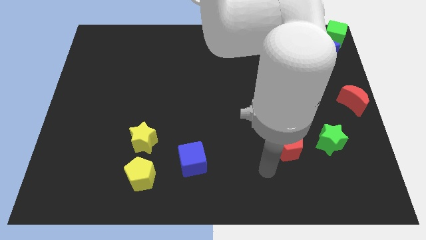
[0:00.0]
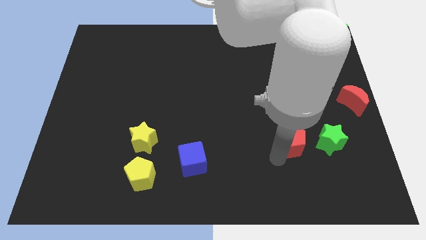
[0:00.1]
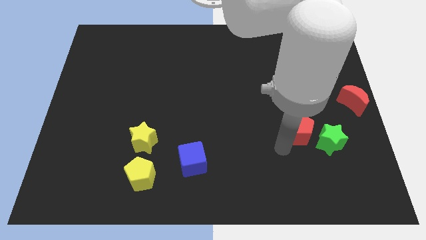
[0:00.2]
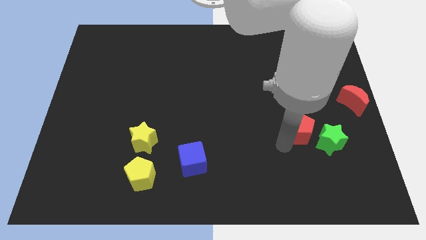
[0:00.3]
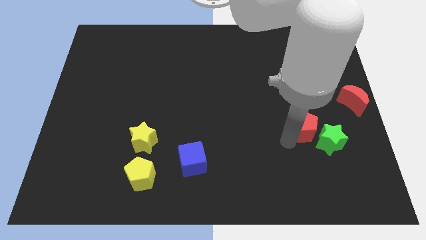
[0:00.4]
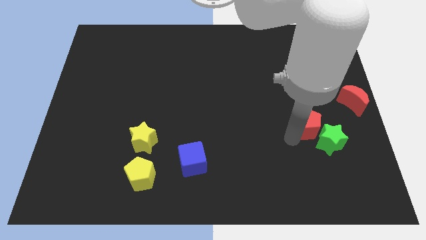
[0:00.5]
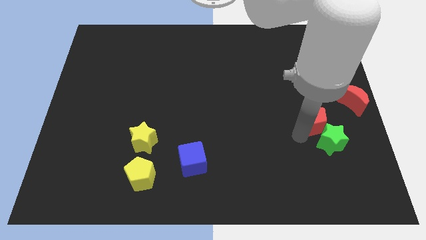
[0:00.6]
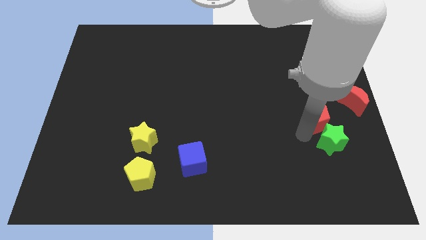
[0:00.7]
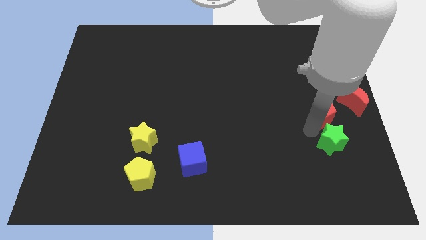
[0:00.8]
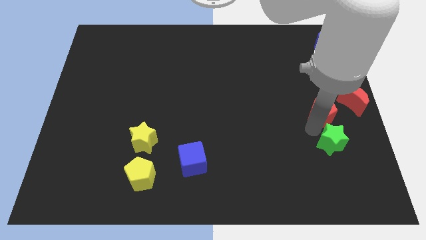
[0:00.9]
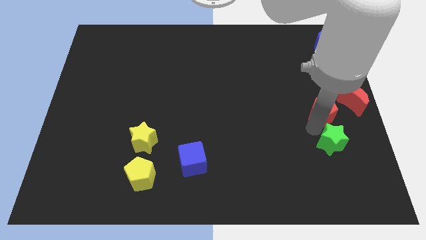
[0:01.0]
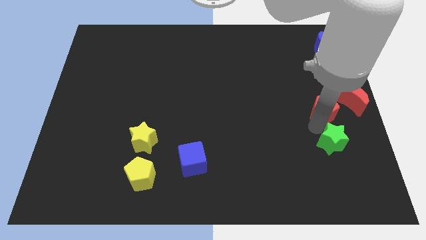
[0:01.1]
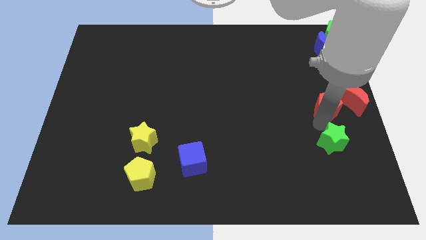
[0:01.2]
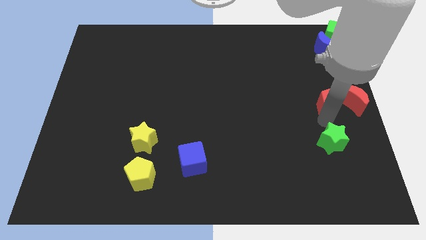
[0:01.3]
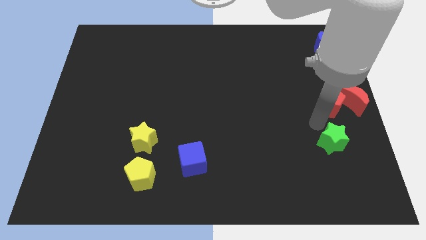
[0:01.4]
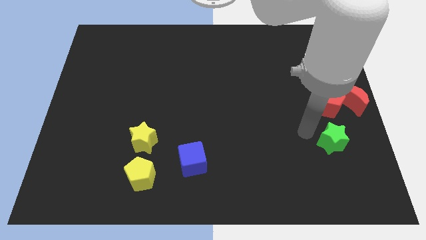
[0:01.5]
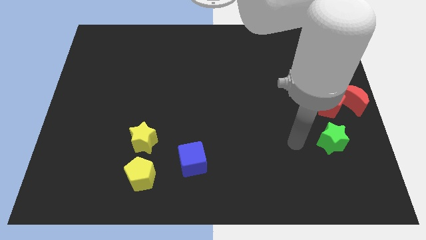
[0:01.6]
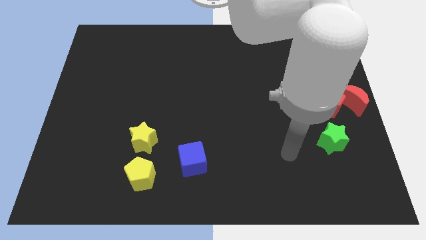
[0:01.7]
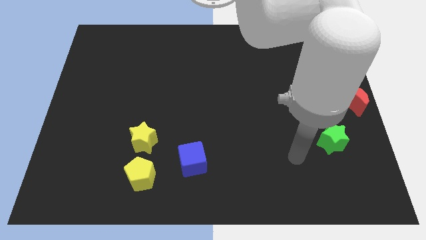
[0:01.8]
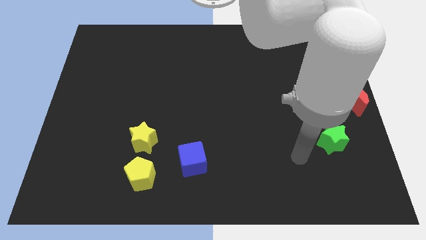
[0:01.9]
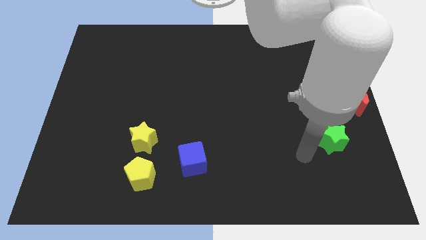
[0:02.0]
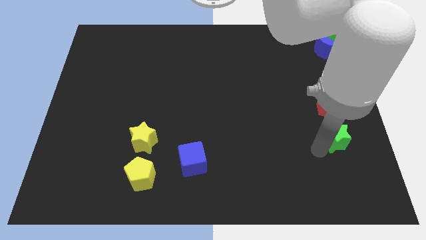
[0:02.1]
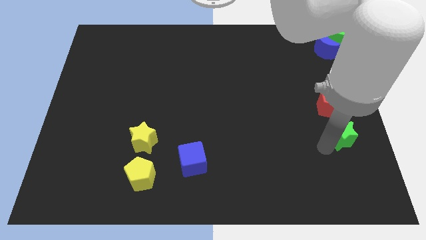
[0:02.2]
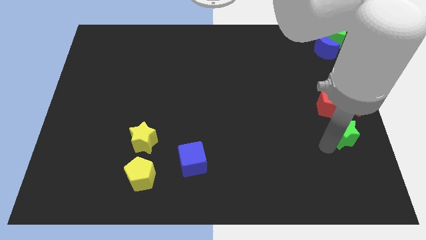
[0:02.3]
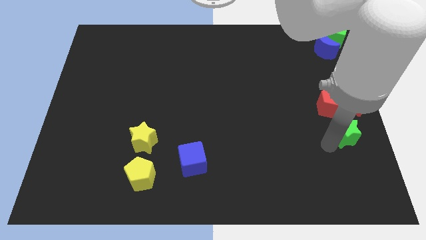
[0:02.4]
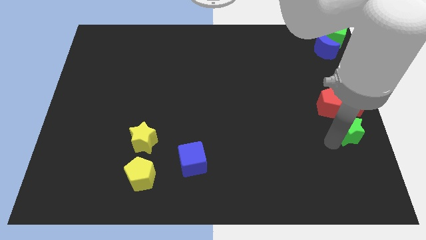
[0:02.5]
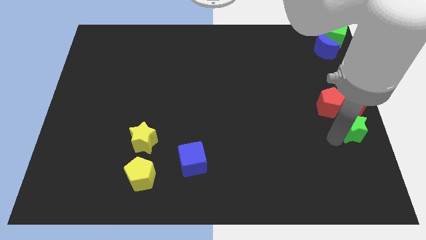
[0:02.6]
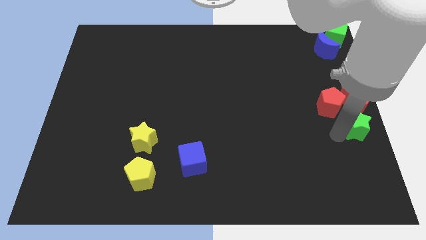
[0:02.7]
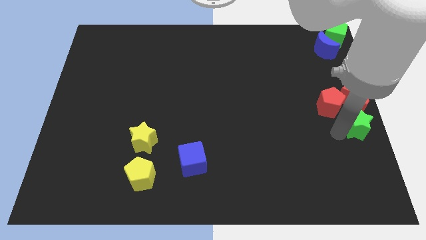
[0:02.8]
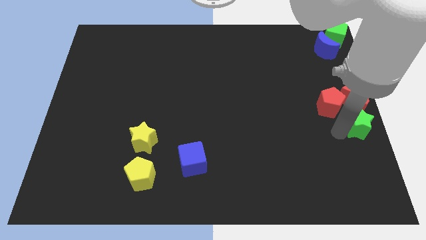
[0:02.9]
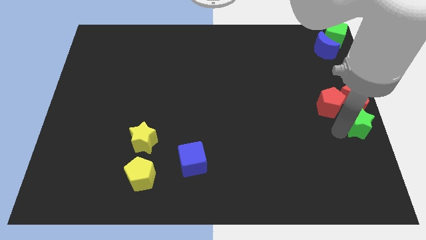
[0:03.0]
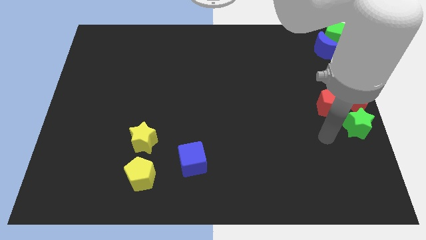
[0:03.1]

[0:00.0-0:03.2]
place the red pentagon and green star into the red moon

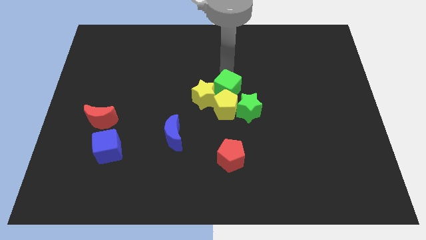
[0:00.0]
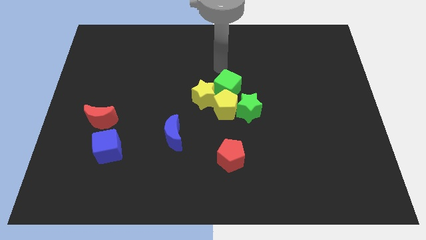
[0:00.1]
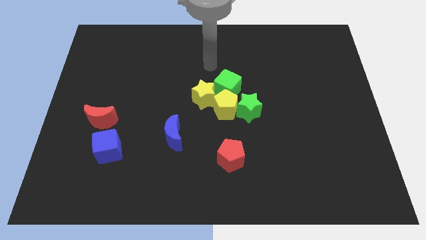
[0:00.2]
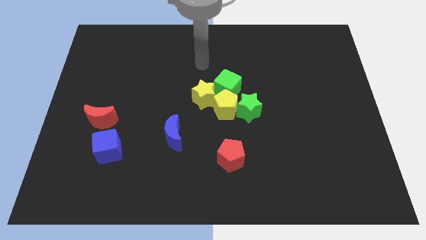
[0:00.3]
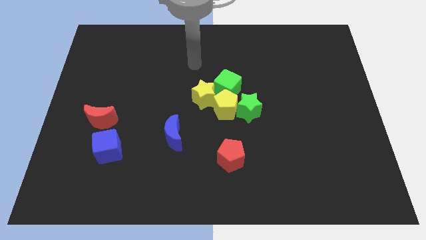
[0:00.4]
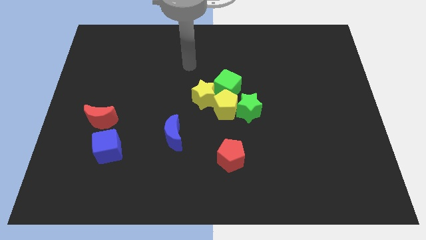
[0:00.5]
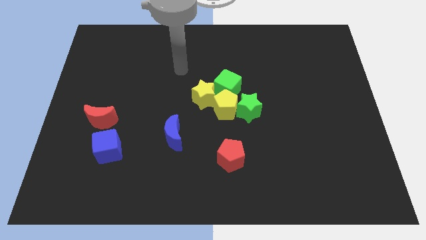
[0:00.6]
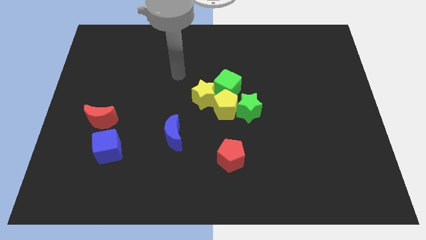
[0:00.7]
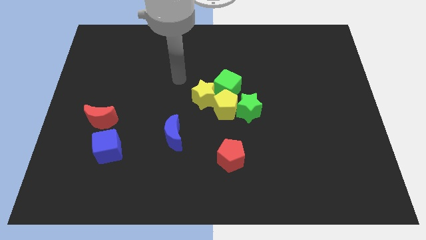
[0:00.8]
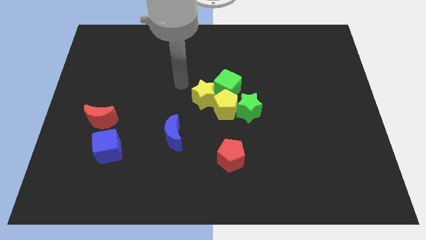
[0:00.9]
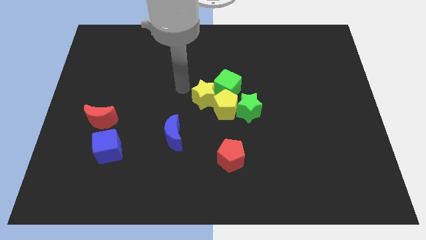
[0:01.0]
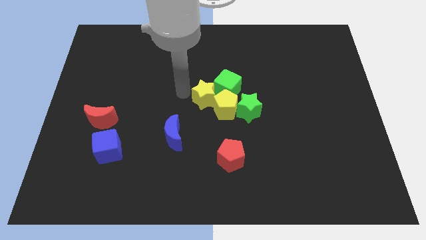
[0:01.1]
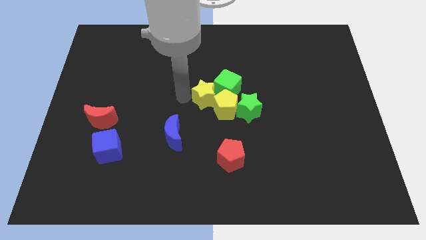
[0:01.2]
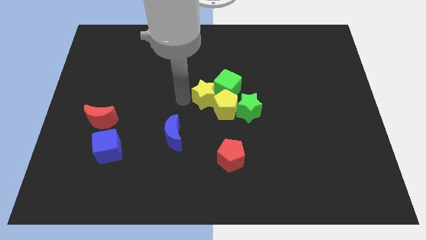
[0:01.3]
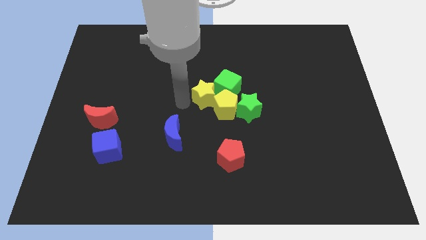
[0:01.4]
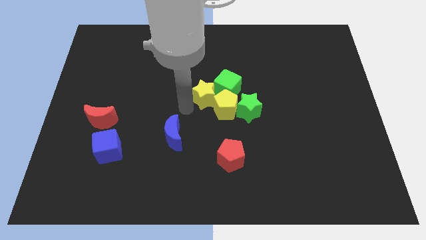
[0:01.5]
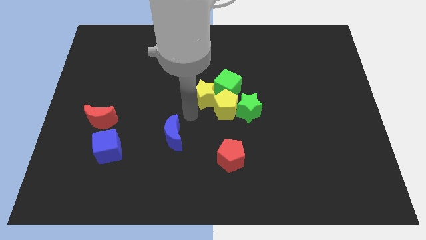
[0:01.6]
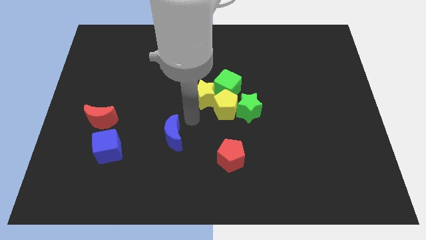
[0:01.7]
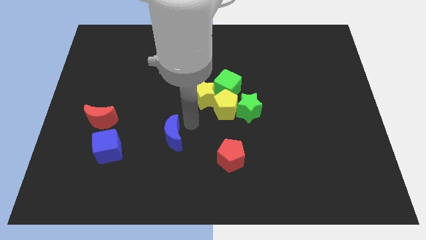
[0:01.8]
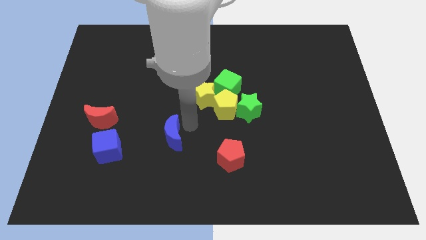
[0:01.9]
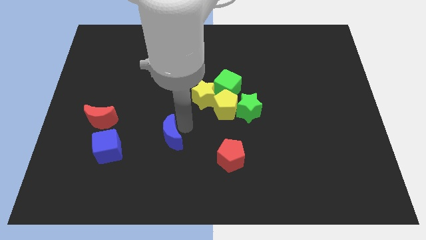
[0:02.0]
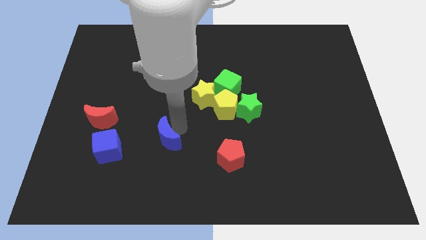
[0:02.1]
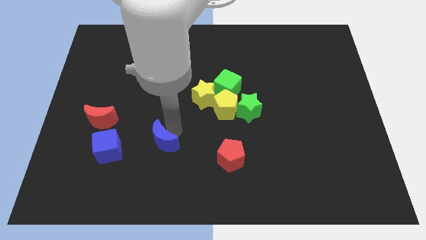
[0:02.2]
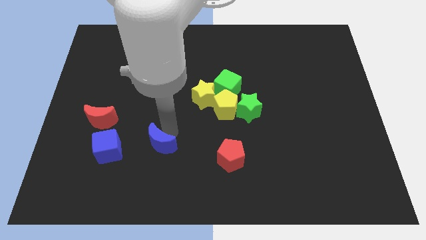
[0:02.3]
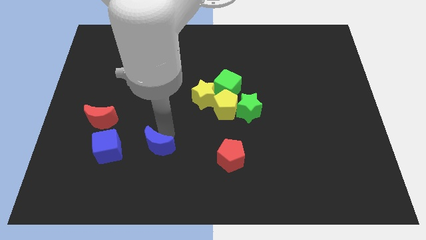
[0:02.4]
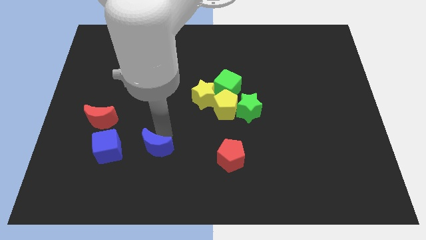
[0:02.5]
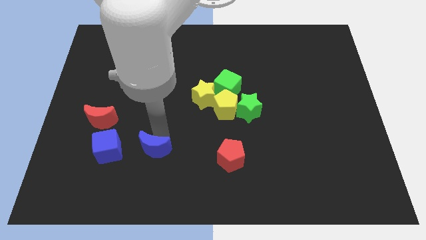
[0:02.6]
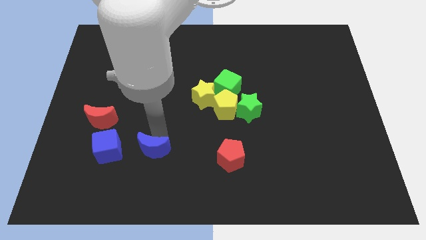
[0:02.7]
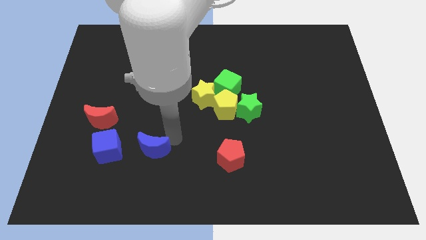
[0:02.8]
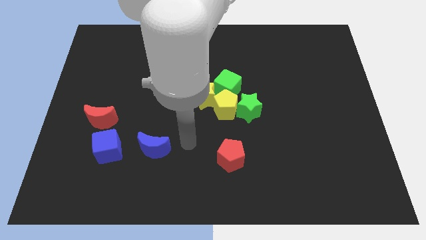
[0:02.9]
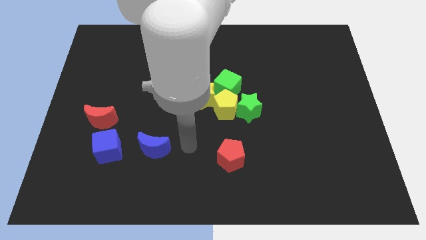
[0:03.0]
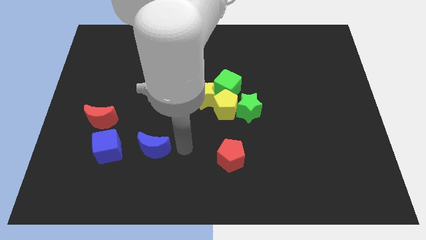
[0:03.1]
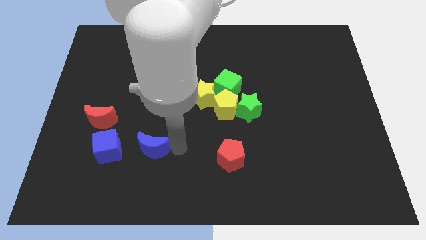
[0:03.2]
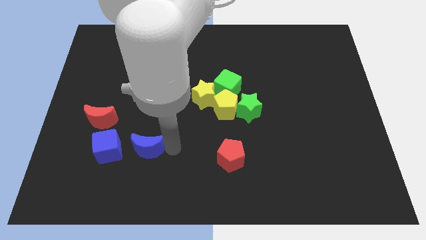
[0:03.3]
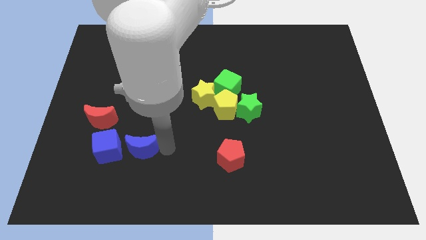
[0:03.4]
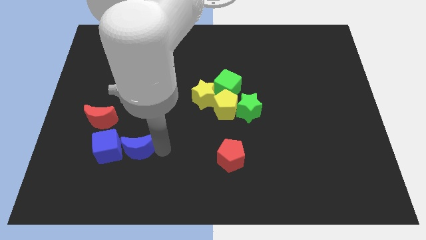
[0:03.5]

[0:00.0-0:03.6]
push the blue crescent to the right side of the blue cube

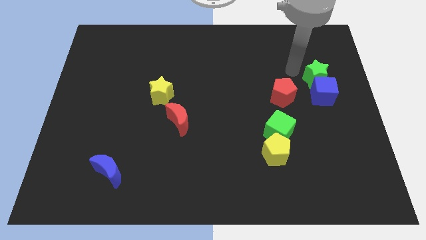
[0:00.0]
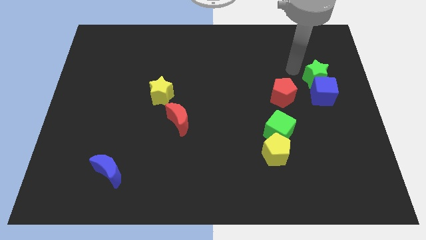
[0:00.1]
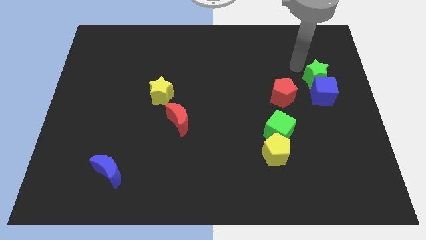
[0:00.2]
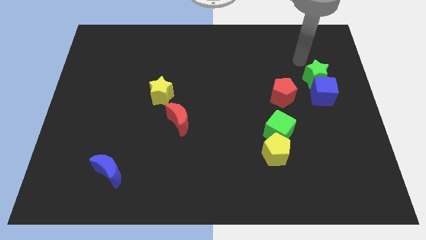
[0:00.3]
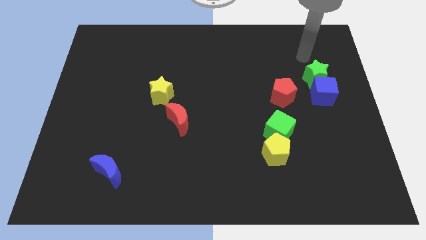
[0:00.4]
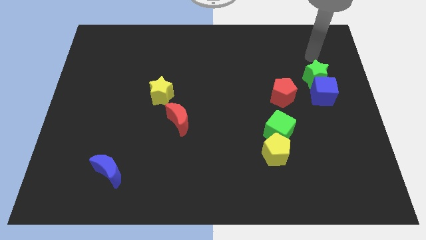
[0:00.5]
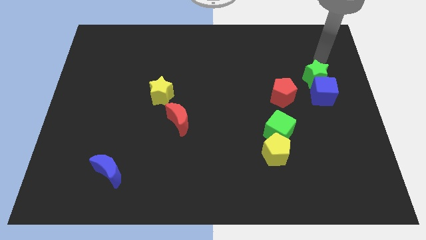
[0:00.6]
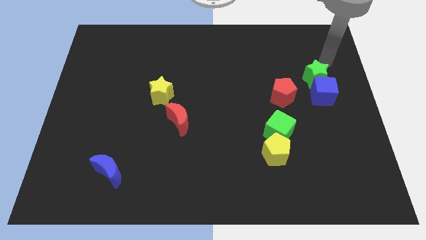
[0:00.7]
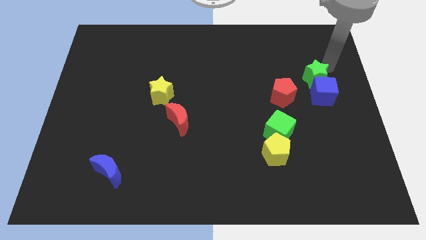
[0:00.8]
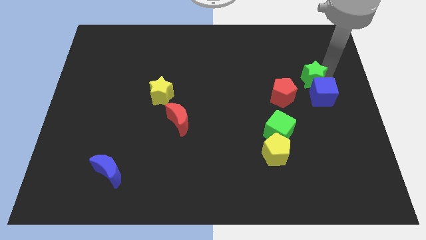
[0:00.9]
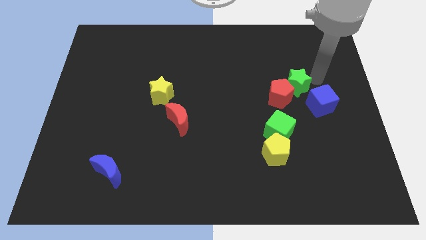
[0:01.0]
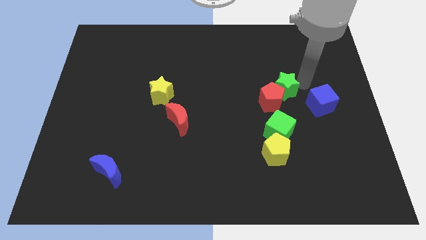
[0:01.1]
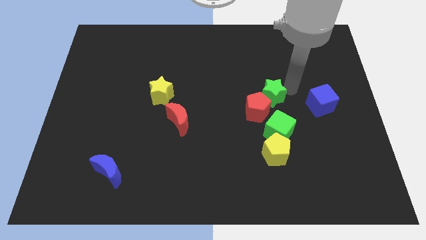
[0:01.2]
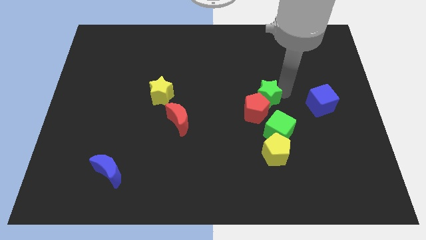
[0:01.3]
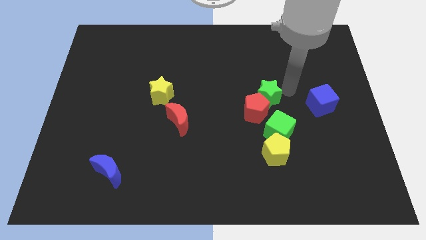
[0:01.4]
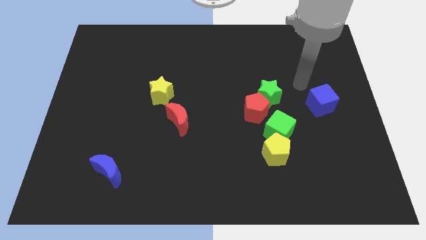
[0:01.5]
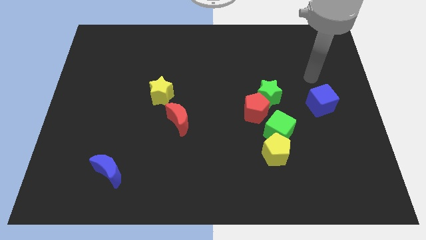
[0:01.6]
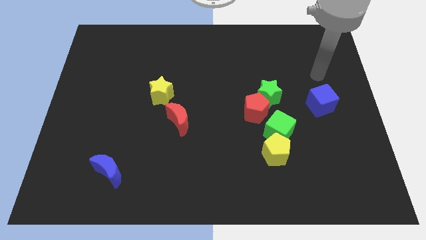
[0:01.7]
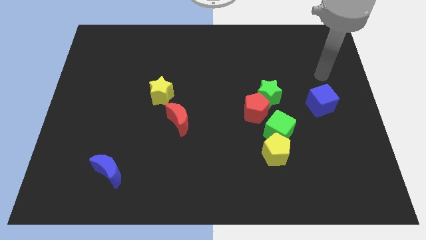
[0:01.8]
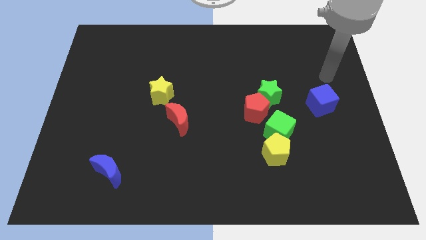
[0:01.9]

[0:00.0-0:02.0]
push the green star into the red pentagon

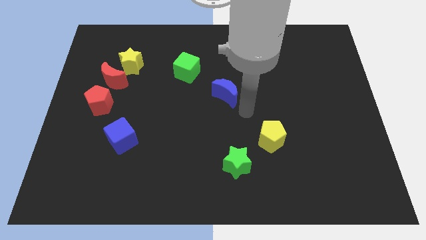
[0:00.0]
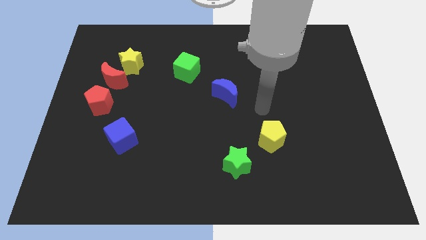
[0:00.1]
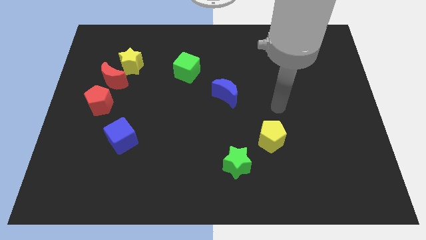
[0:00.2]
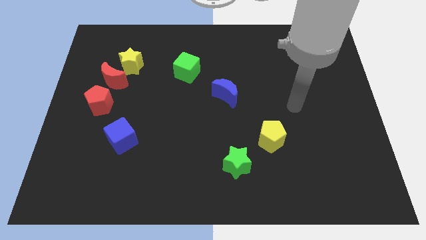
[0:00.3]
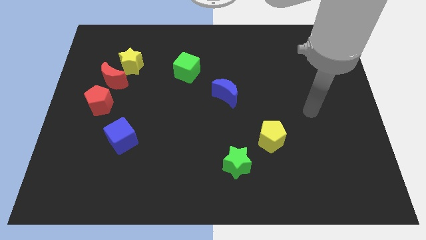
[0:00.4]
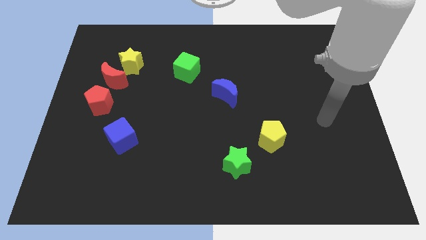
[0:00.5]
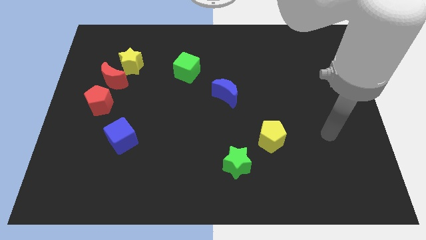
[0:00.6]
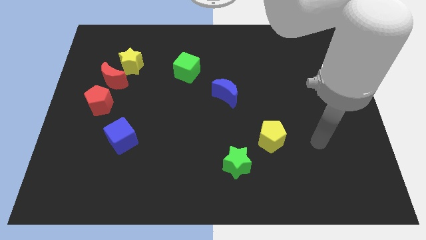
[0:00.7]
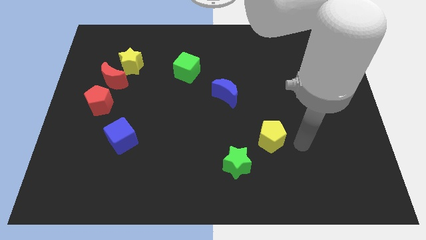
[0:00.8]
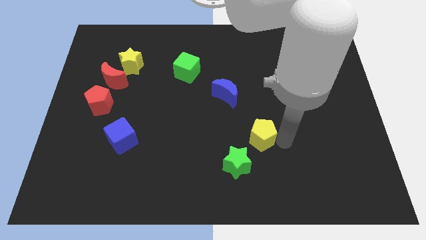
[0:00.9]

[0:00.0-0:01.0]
place your arm to the right side of yellow pentagon
